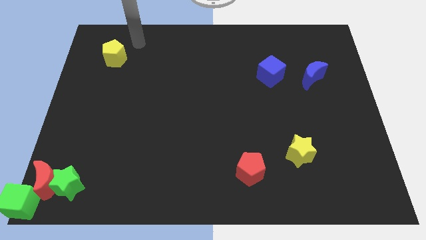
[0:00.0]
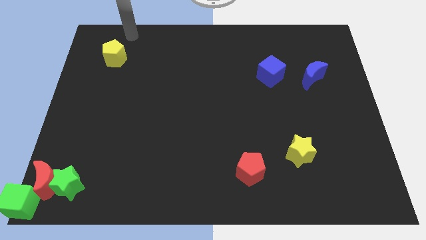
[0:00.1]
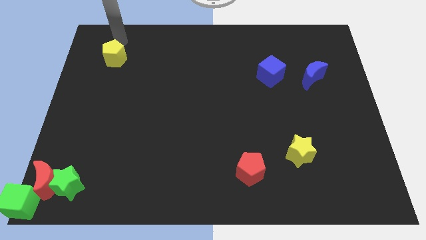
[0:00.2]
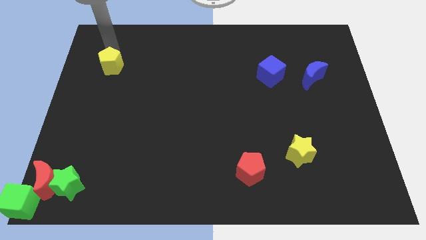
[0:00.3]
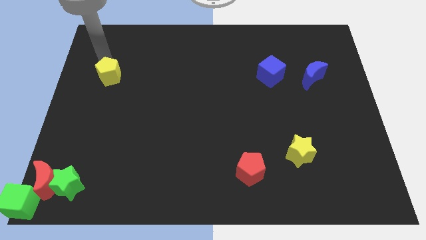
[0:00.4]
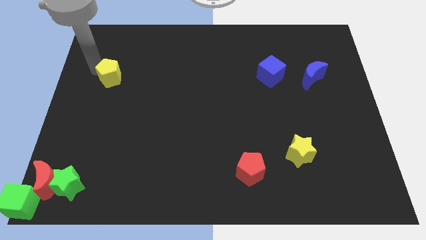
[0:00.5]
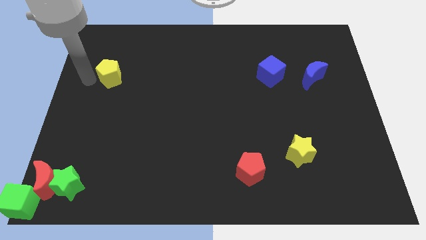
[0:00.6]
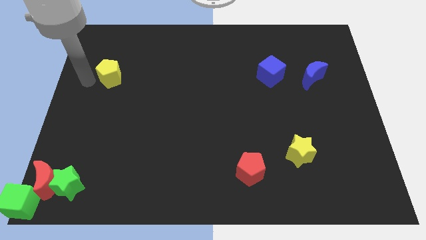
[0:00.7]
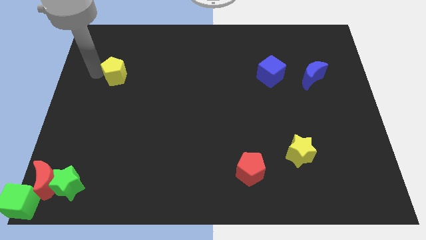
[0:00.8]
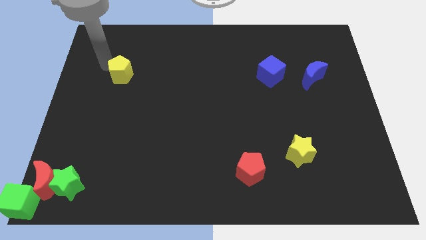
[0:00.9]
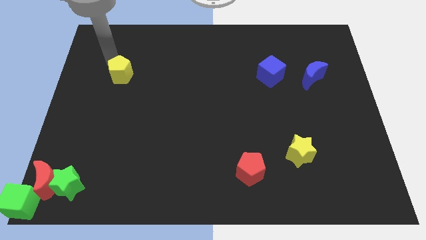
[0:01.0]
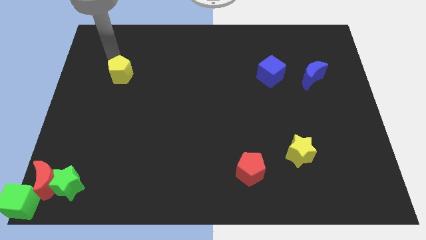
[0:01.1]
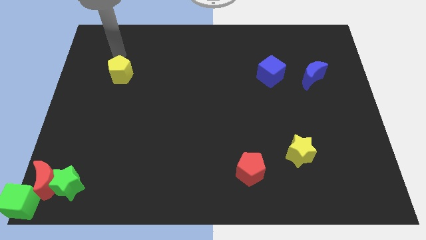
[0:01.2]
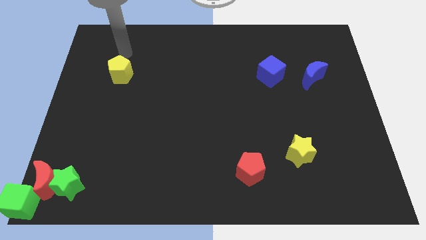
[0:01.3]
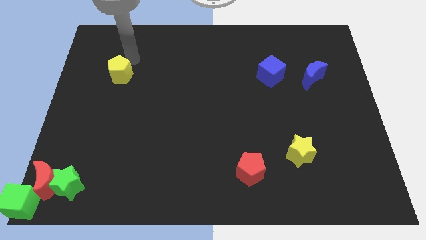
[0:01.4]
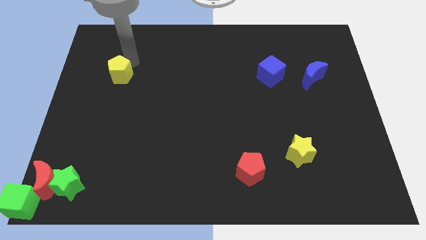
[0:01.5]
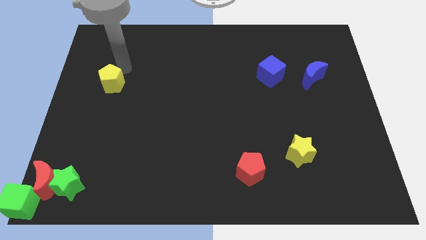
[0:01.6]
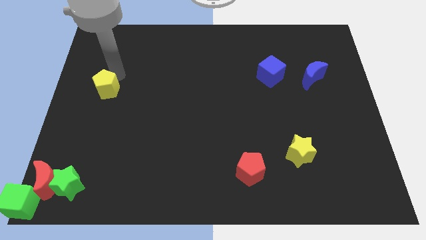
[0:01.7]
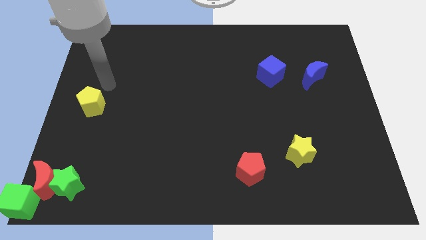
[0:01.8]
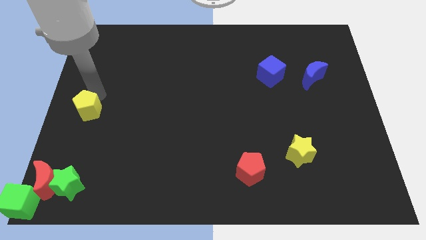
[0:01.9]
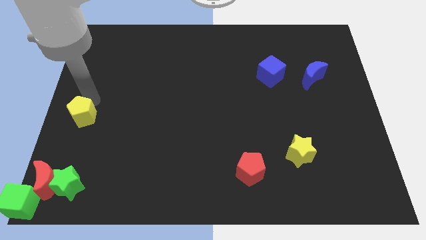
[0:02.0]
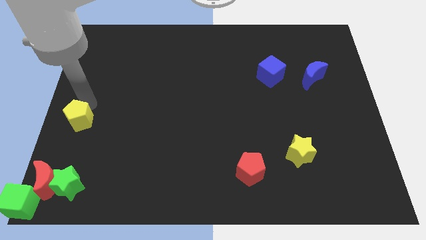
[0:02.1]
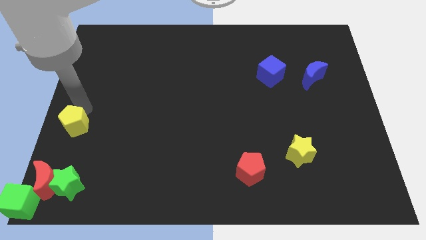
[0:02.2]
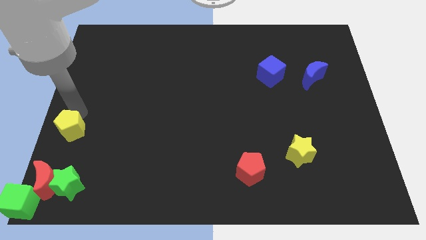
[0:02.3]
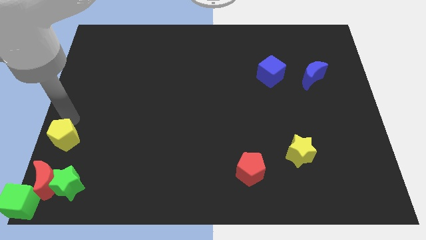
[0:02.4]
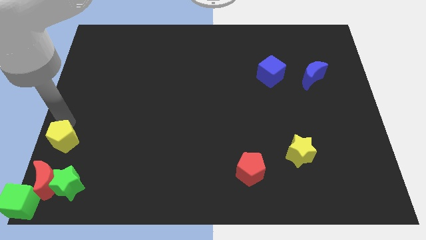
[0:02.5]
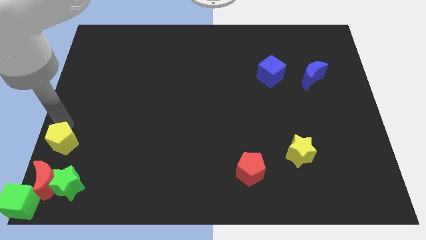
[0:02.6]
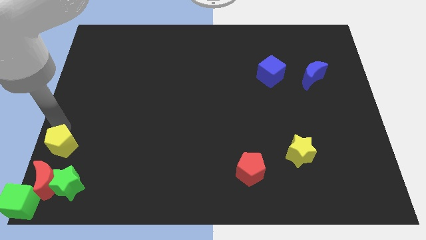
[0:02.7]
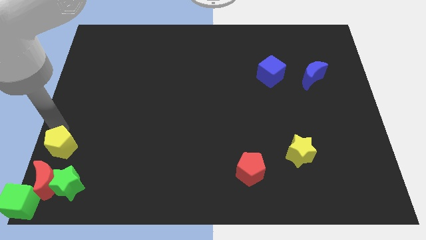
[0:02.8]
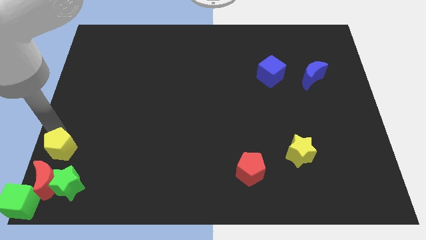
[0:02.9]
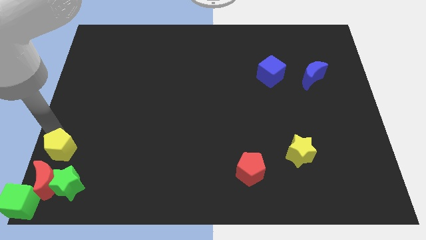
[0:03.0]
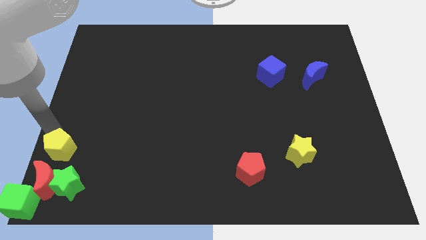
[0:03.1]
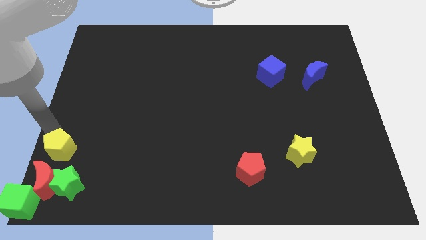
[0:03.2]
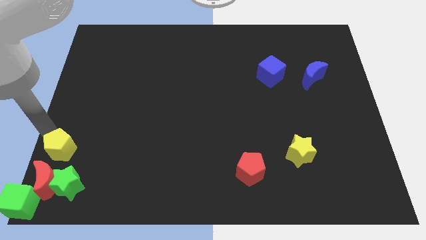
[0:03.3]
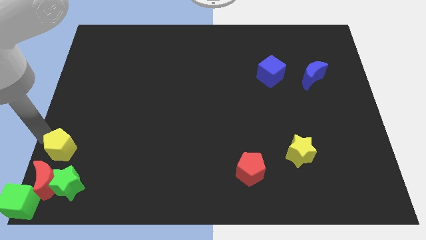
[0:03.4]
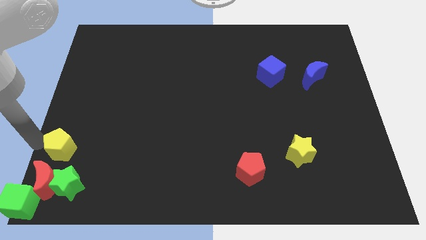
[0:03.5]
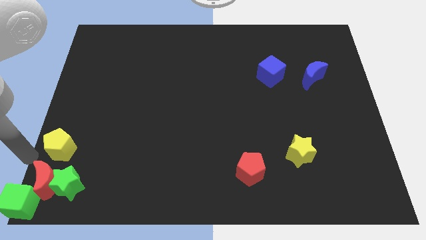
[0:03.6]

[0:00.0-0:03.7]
move the yellow pentagon to the top side of the bottom left blocks

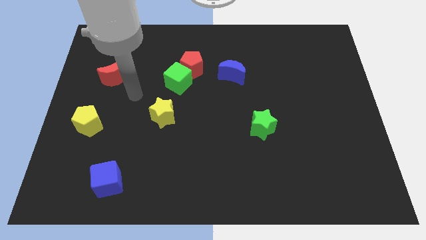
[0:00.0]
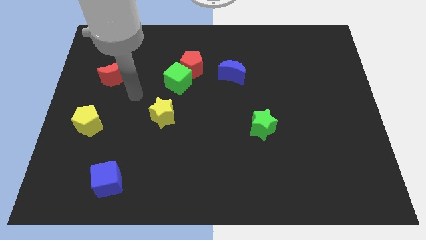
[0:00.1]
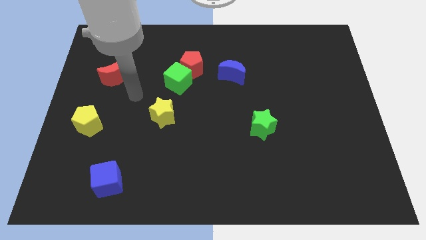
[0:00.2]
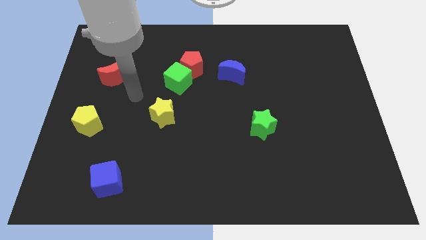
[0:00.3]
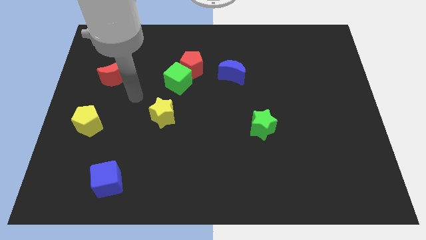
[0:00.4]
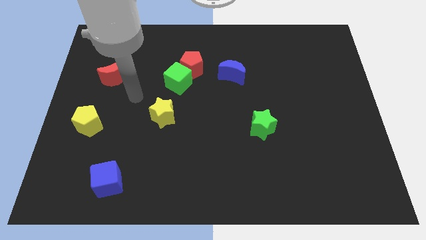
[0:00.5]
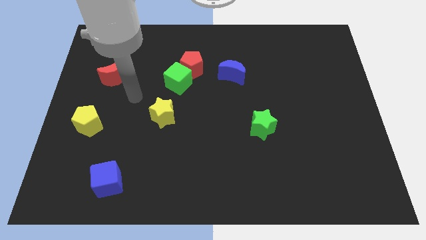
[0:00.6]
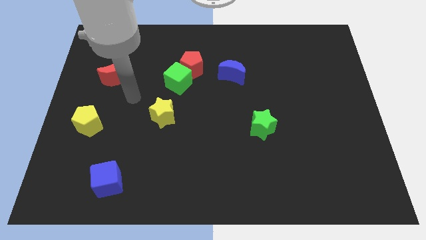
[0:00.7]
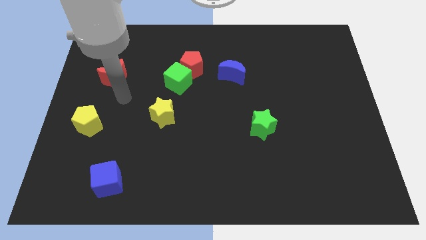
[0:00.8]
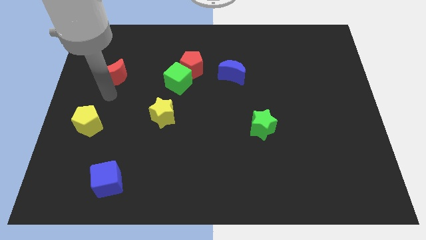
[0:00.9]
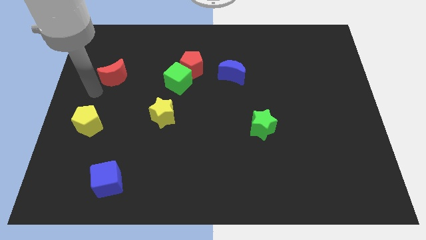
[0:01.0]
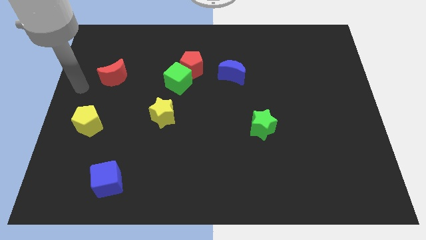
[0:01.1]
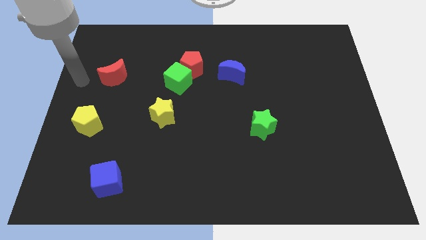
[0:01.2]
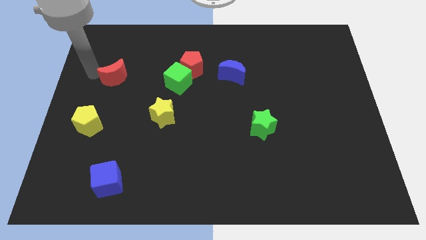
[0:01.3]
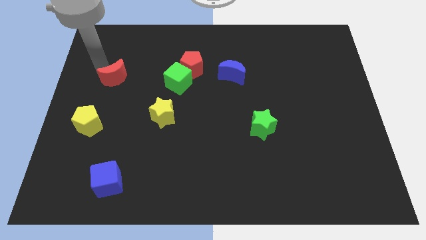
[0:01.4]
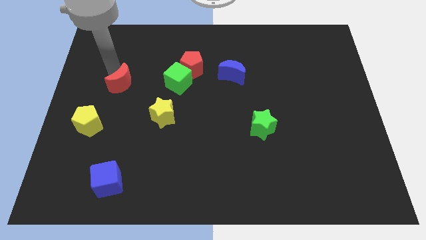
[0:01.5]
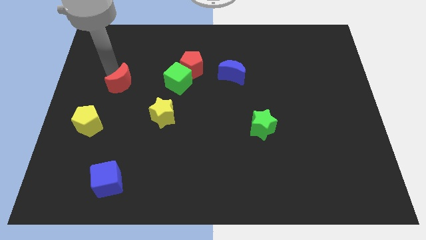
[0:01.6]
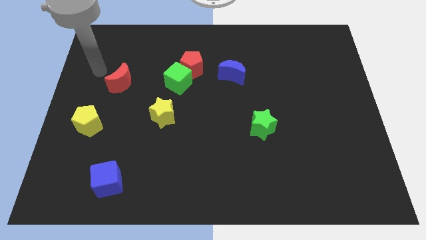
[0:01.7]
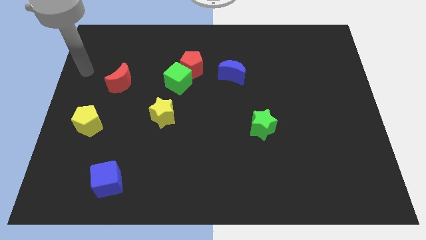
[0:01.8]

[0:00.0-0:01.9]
slightly push the red moon towards left of green cube

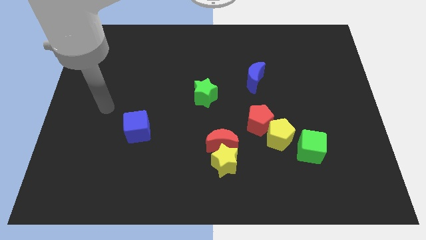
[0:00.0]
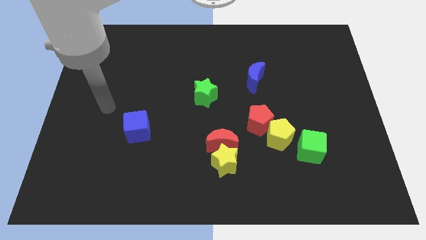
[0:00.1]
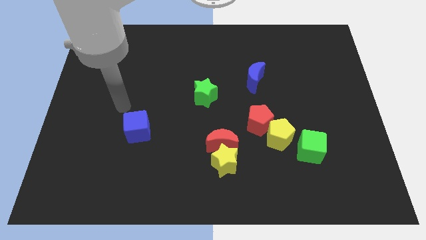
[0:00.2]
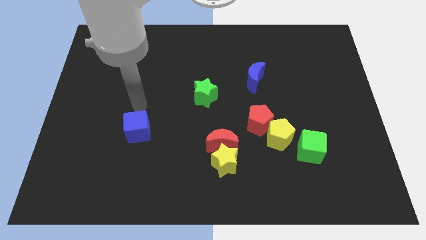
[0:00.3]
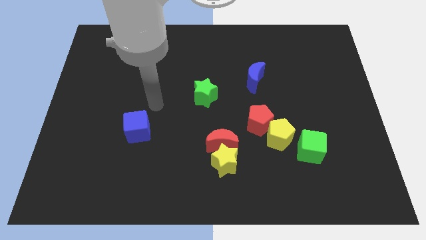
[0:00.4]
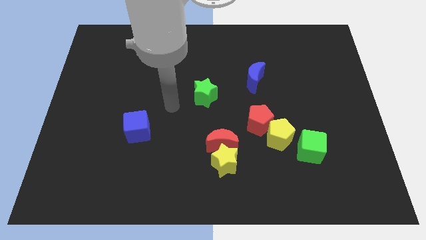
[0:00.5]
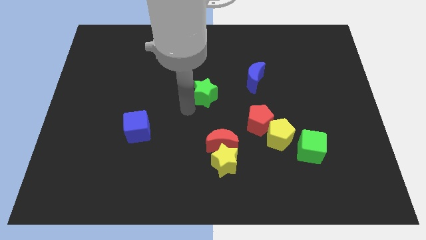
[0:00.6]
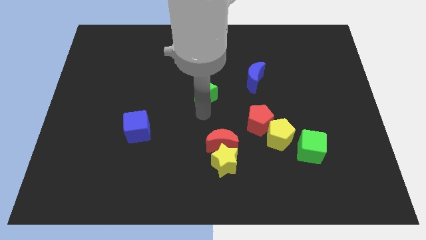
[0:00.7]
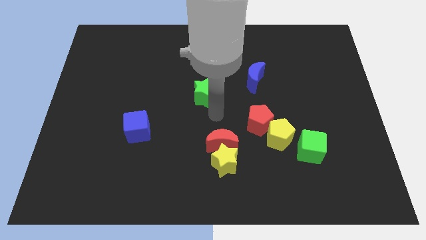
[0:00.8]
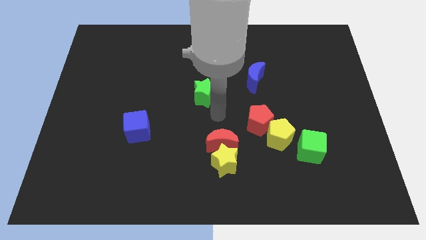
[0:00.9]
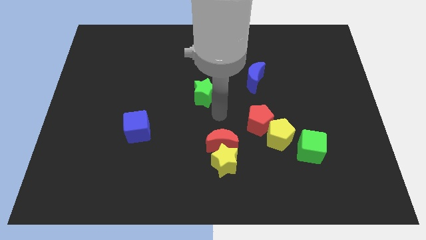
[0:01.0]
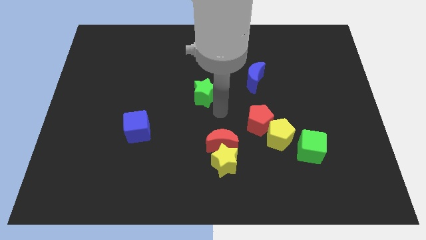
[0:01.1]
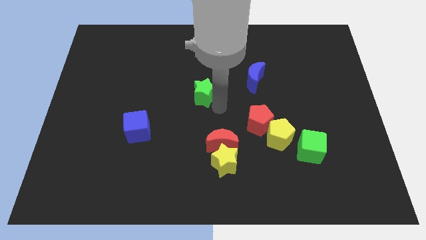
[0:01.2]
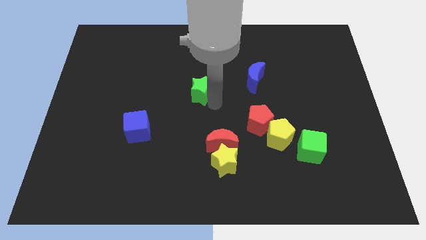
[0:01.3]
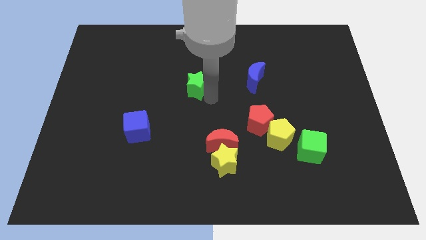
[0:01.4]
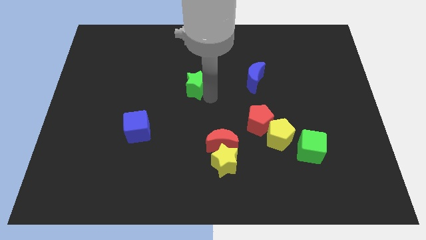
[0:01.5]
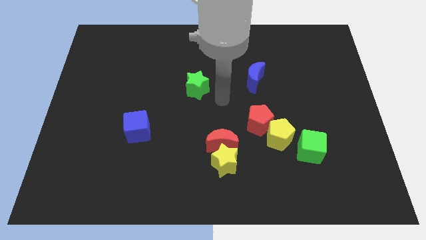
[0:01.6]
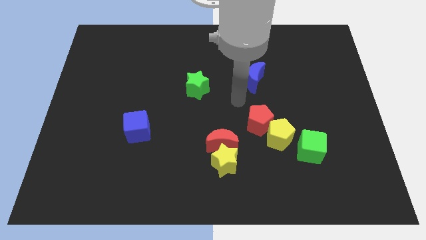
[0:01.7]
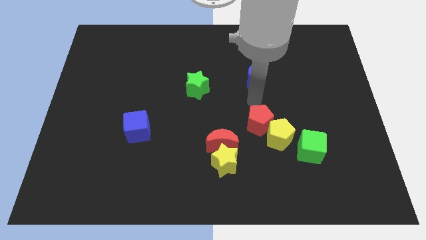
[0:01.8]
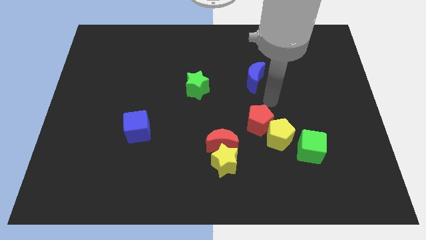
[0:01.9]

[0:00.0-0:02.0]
place the green star to the left of the blue moon

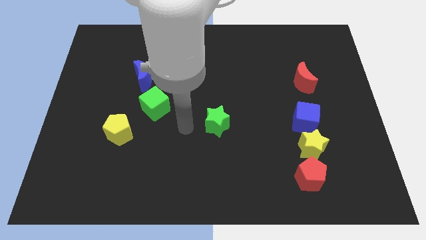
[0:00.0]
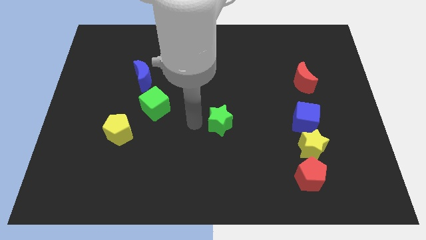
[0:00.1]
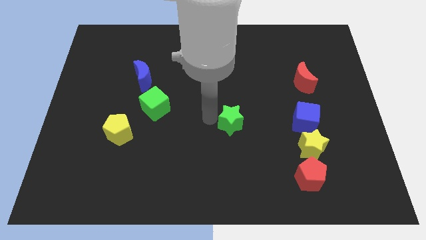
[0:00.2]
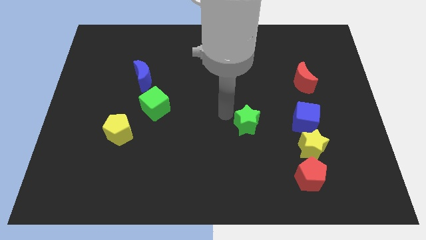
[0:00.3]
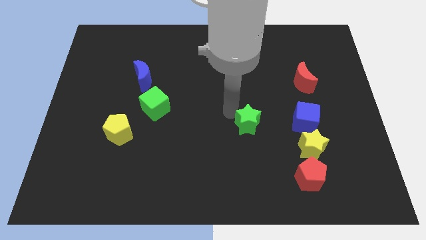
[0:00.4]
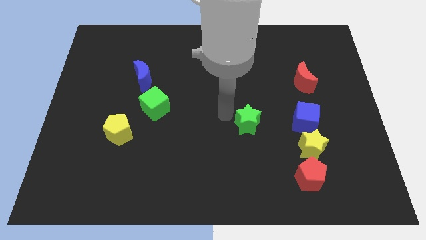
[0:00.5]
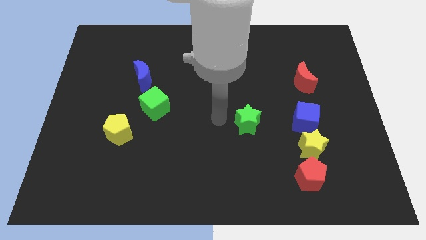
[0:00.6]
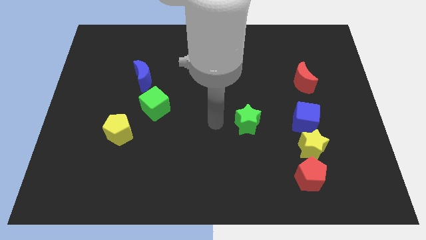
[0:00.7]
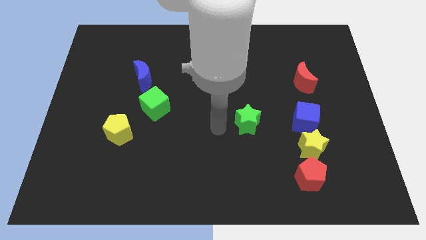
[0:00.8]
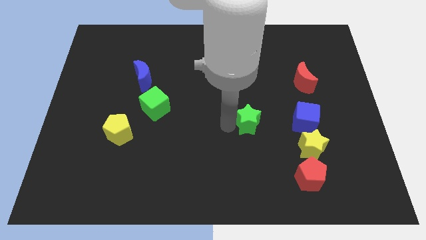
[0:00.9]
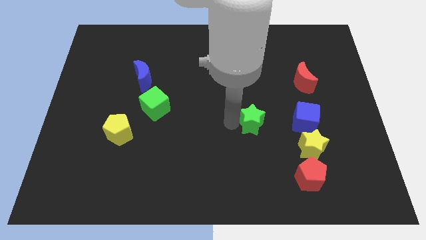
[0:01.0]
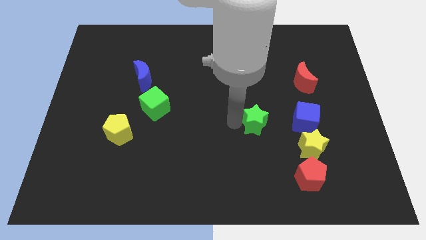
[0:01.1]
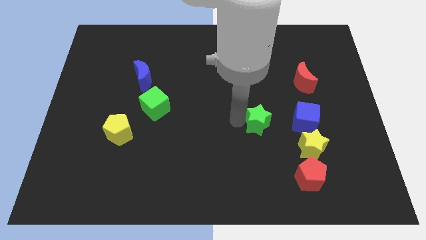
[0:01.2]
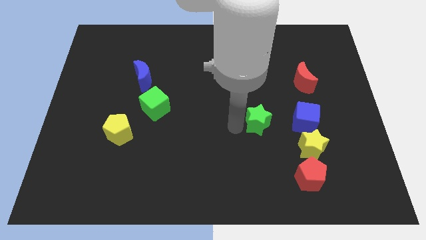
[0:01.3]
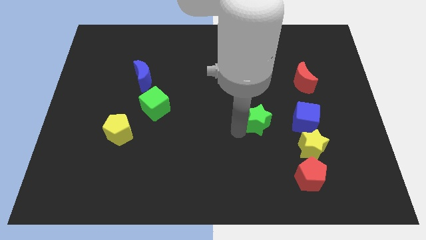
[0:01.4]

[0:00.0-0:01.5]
slide the green star towards the blue cube
